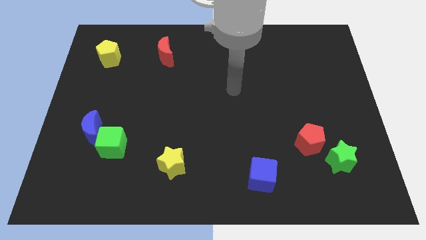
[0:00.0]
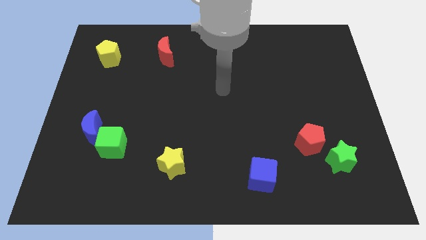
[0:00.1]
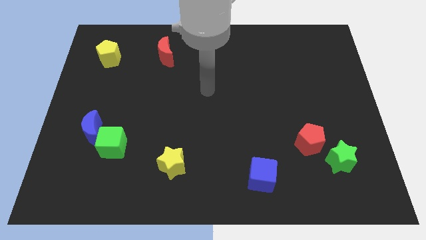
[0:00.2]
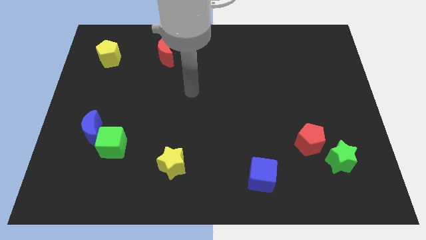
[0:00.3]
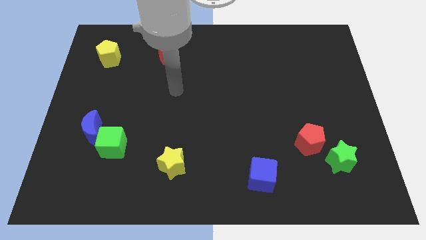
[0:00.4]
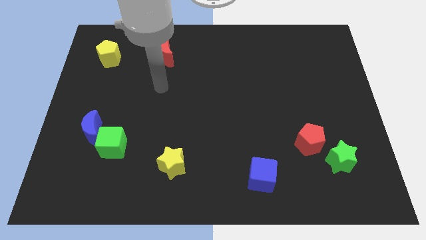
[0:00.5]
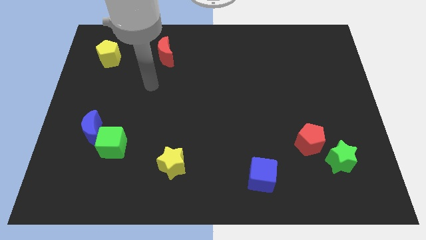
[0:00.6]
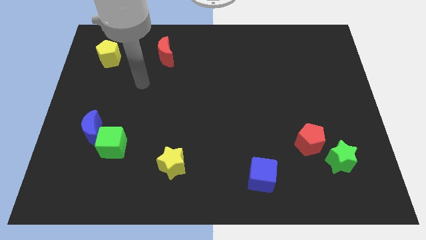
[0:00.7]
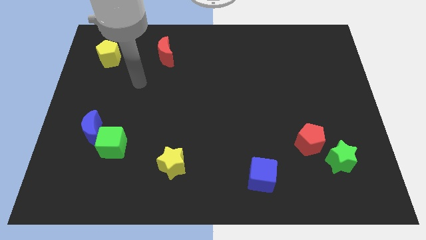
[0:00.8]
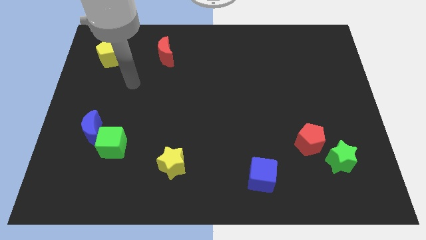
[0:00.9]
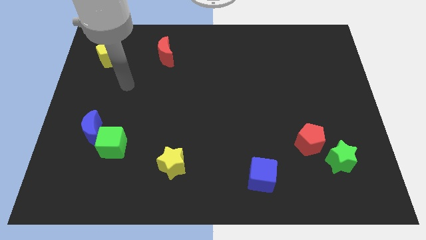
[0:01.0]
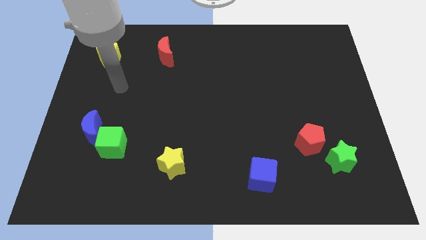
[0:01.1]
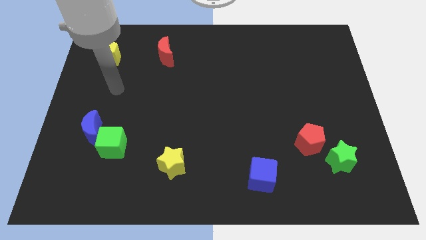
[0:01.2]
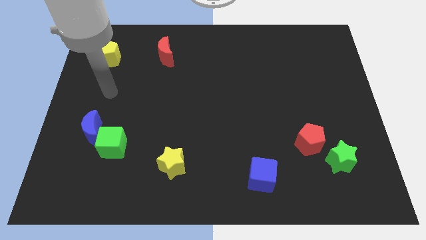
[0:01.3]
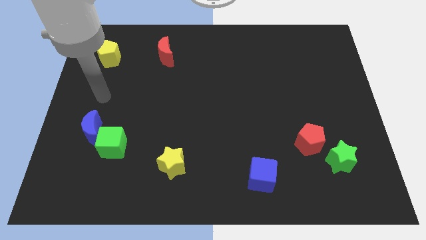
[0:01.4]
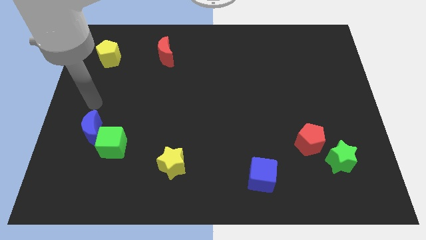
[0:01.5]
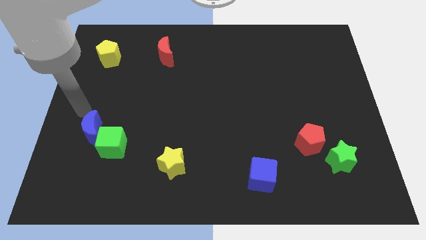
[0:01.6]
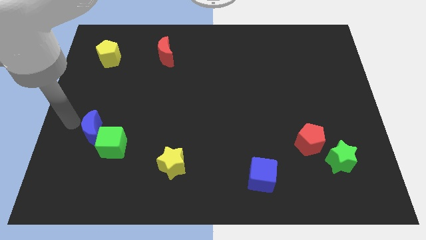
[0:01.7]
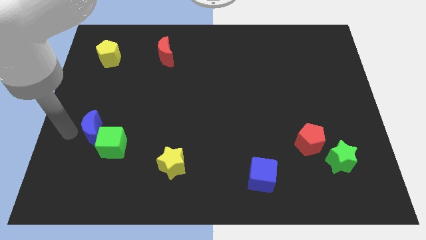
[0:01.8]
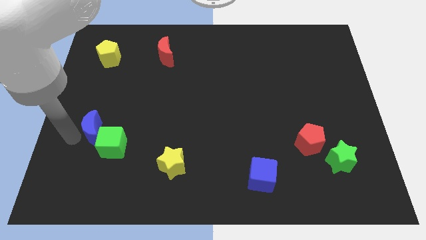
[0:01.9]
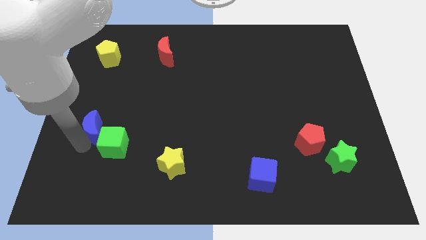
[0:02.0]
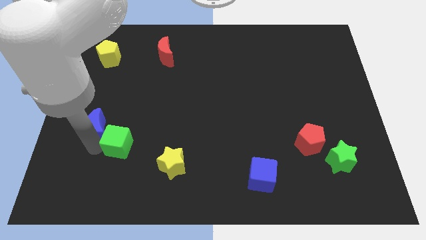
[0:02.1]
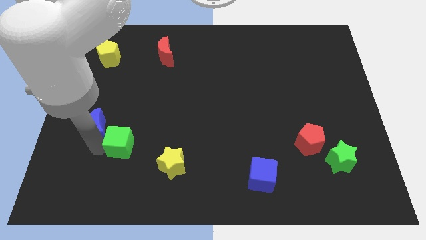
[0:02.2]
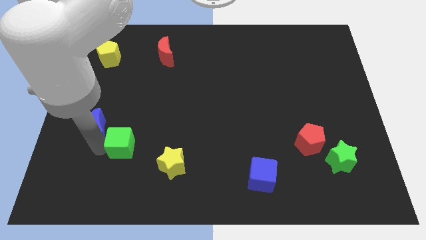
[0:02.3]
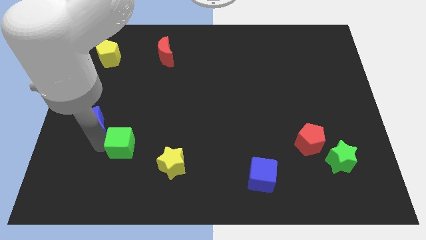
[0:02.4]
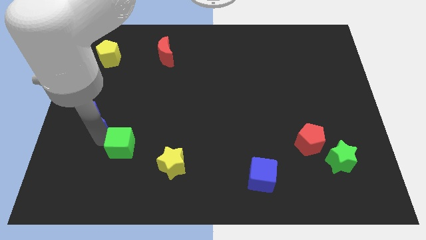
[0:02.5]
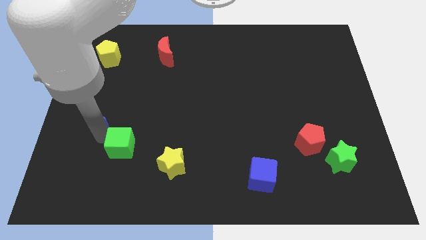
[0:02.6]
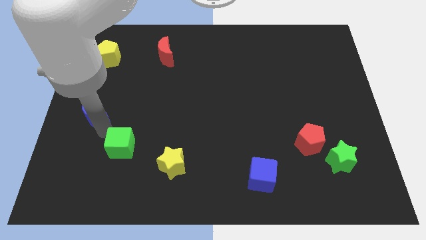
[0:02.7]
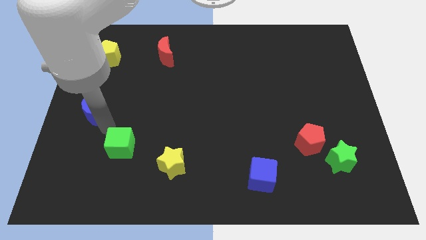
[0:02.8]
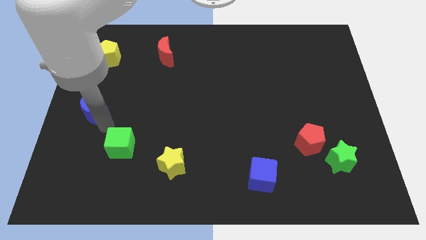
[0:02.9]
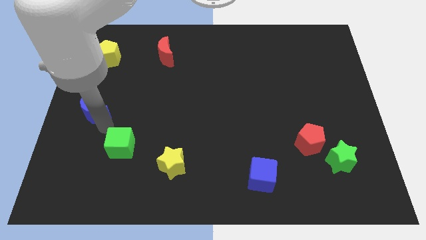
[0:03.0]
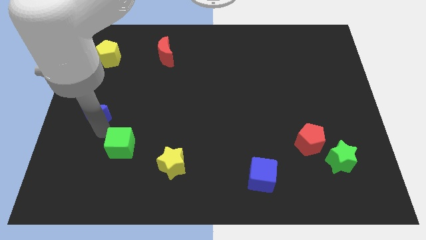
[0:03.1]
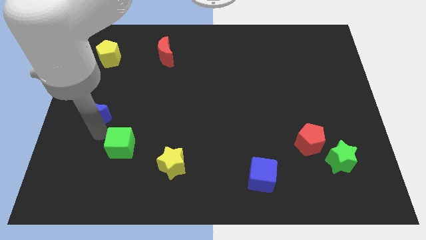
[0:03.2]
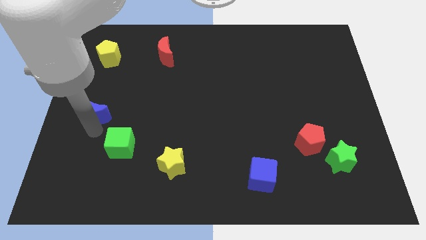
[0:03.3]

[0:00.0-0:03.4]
push the blue crescent to the top left of the green cube

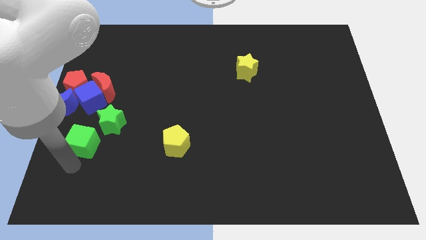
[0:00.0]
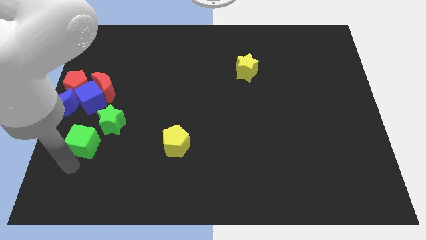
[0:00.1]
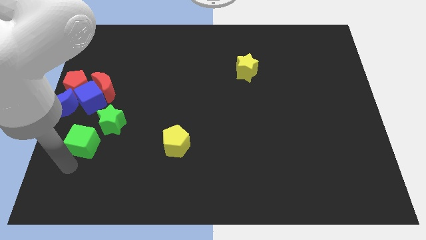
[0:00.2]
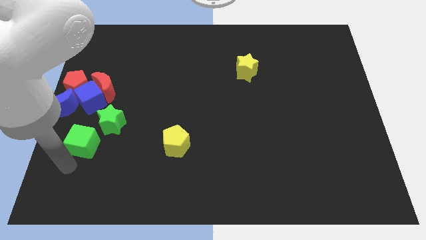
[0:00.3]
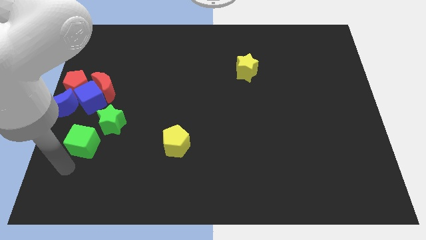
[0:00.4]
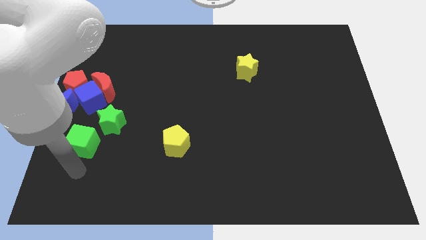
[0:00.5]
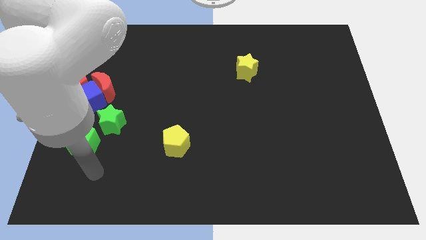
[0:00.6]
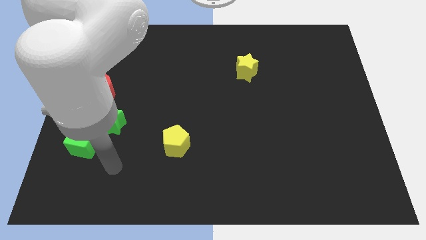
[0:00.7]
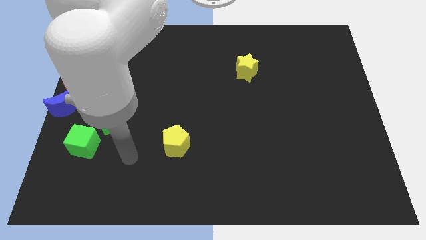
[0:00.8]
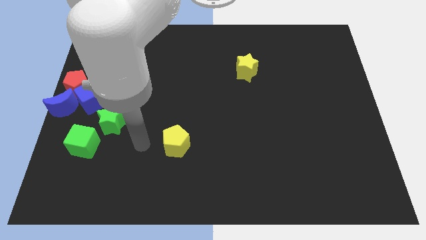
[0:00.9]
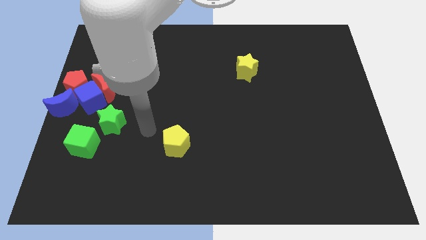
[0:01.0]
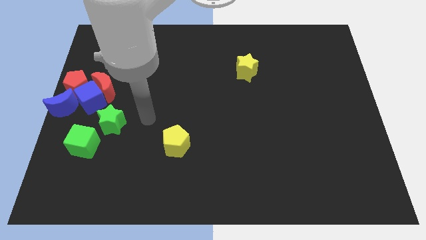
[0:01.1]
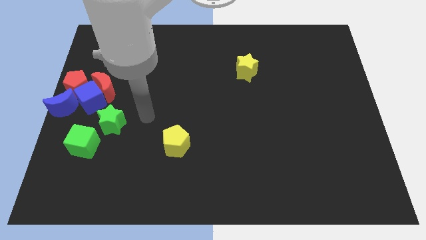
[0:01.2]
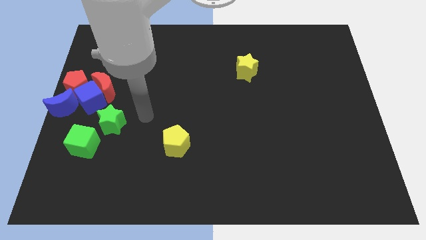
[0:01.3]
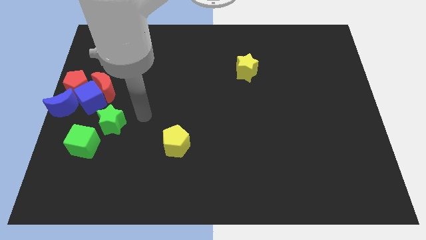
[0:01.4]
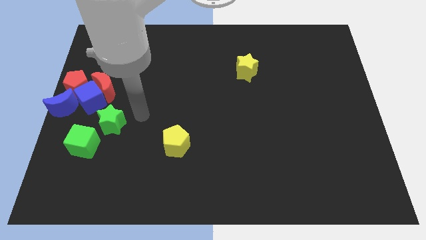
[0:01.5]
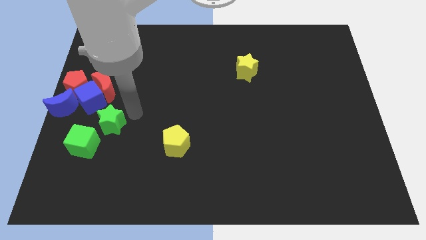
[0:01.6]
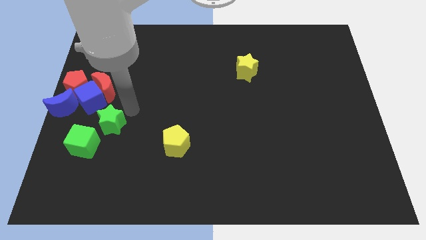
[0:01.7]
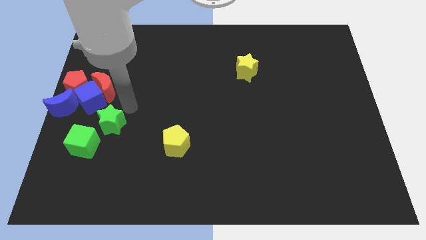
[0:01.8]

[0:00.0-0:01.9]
move your arm to the top right of the green star

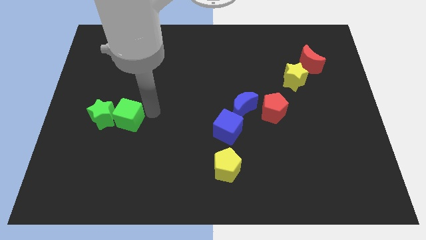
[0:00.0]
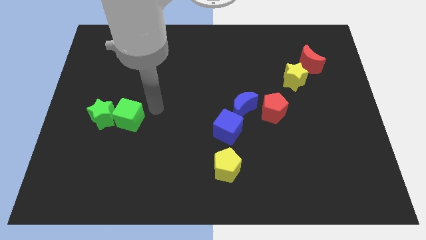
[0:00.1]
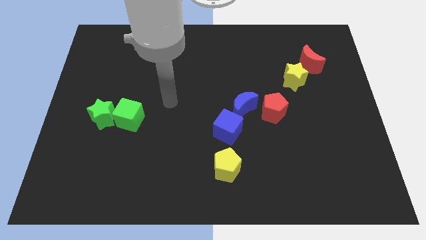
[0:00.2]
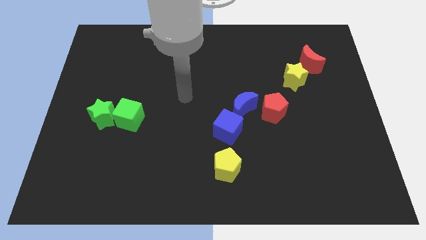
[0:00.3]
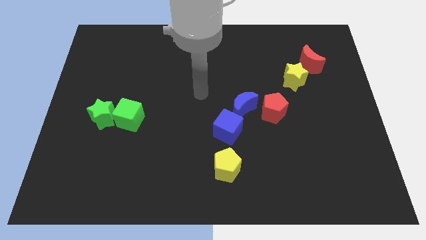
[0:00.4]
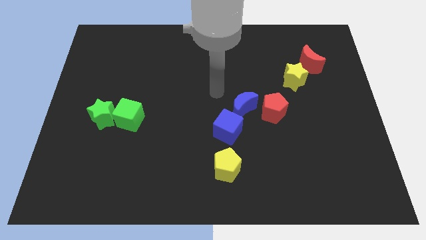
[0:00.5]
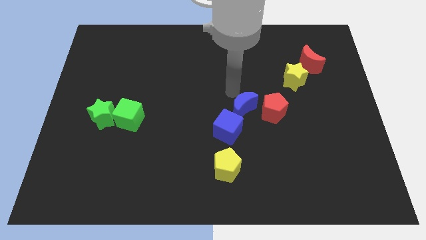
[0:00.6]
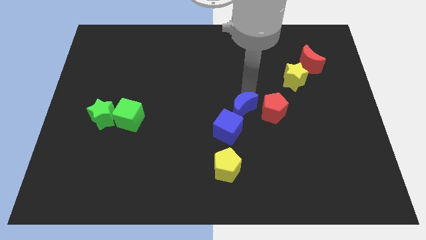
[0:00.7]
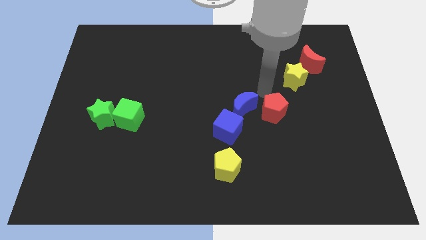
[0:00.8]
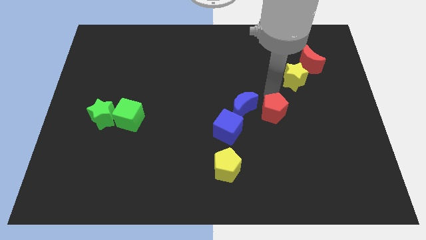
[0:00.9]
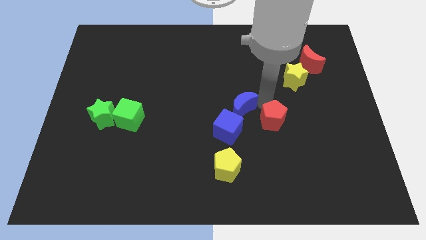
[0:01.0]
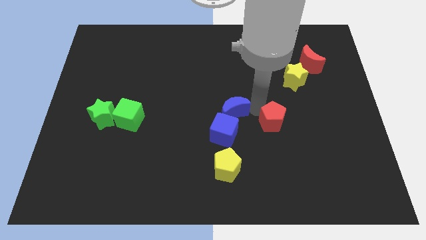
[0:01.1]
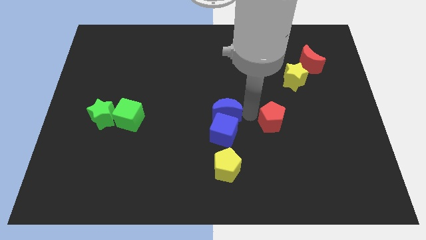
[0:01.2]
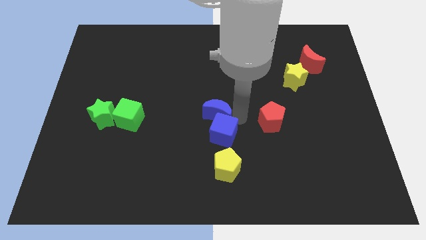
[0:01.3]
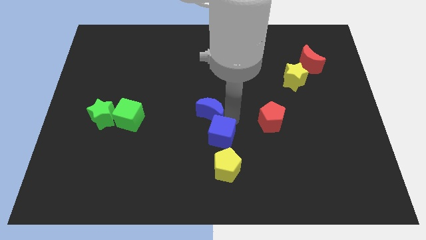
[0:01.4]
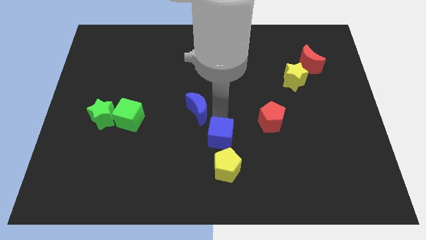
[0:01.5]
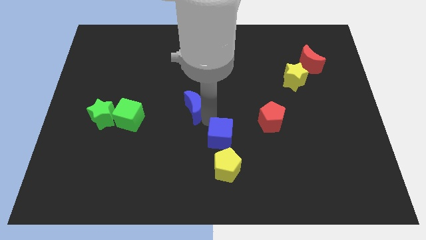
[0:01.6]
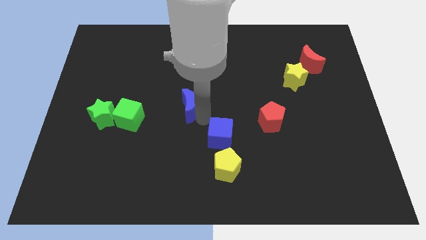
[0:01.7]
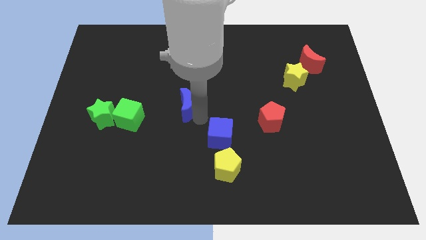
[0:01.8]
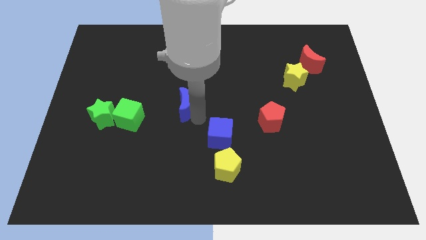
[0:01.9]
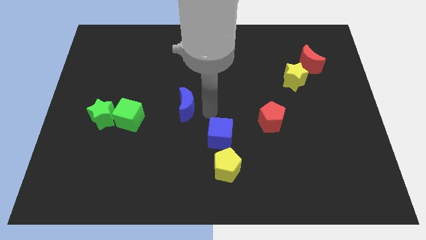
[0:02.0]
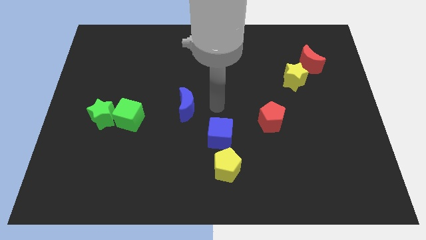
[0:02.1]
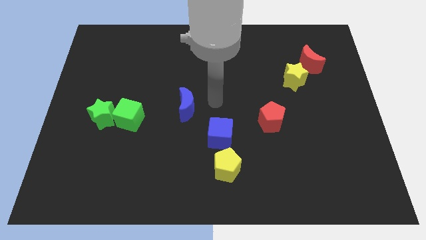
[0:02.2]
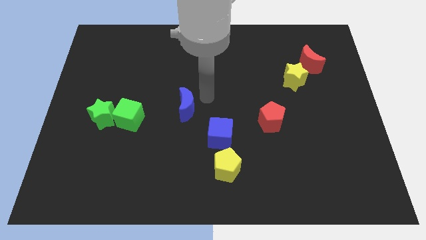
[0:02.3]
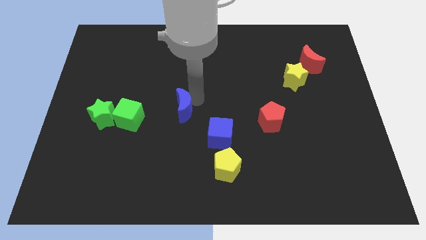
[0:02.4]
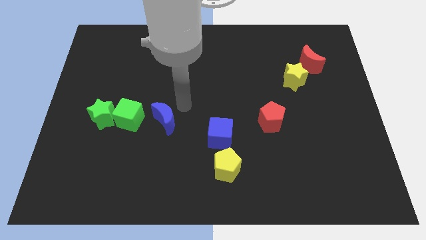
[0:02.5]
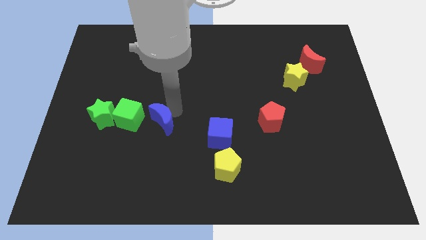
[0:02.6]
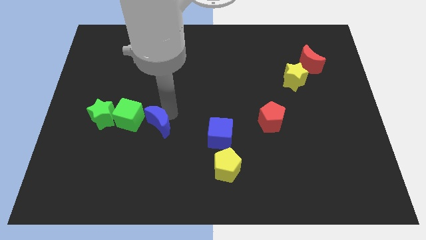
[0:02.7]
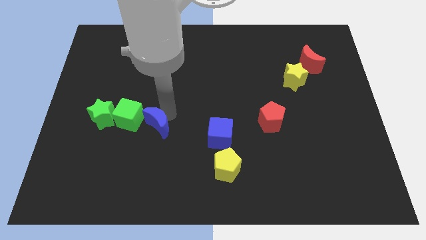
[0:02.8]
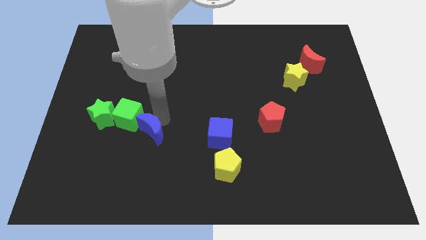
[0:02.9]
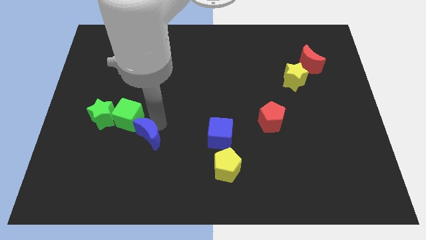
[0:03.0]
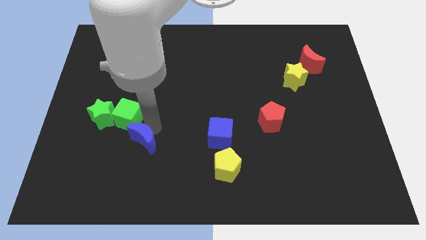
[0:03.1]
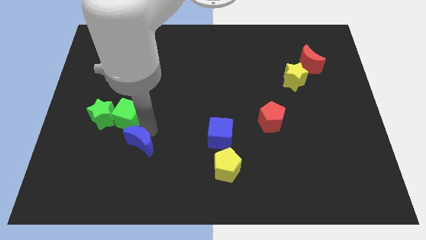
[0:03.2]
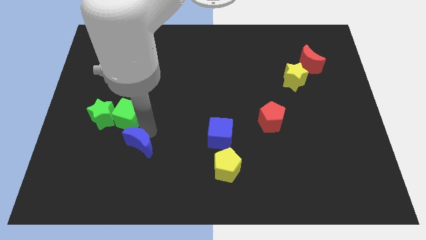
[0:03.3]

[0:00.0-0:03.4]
push the blue crescent to the bottom right of the green cube

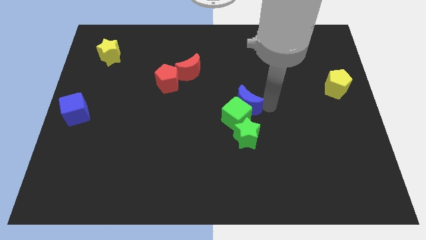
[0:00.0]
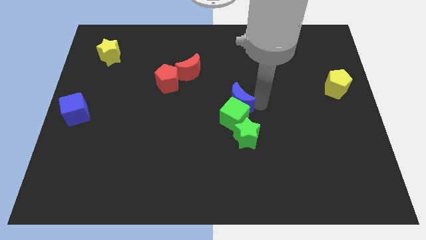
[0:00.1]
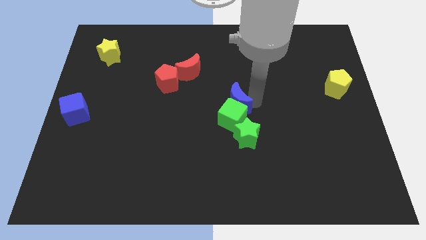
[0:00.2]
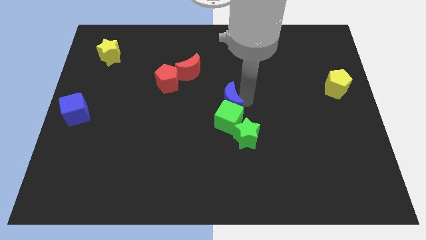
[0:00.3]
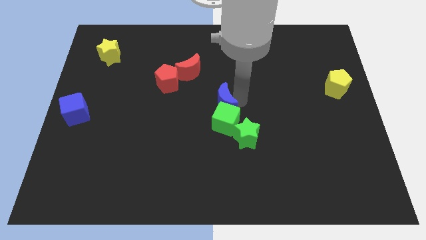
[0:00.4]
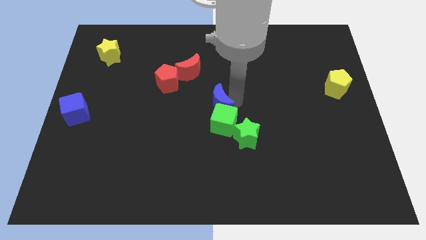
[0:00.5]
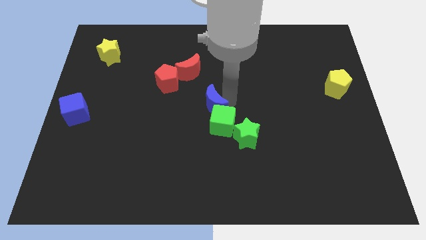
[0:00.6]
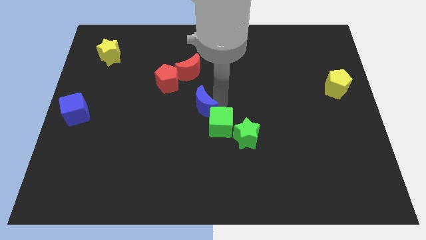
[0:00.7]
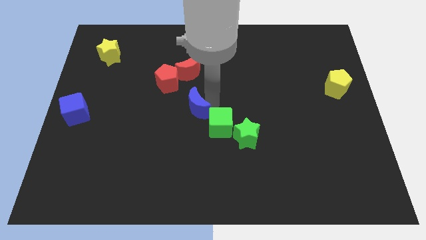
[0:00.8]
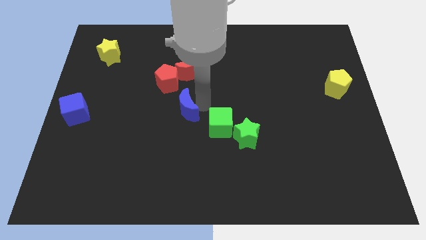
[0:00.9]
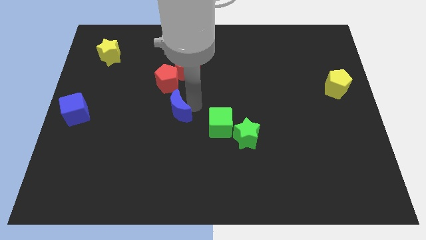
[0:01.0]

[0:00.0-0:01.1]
place blue moon to the top left of green cube
